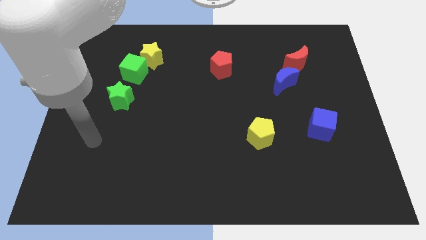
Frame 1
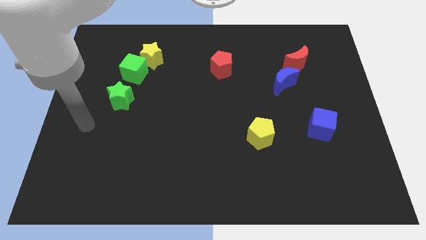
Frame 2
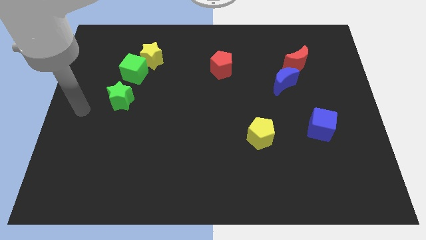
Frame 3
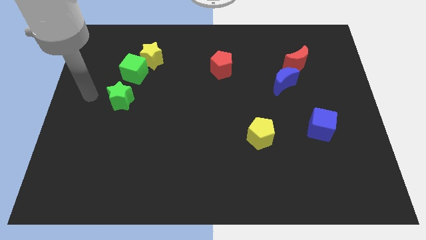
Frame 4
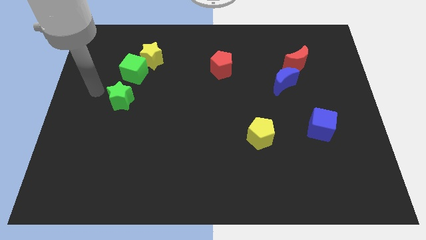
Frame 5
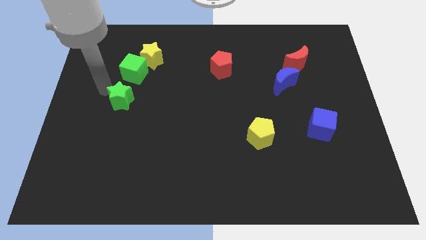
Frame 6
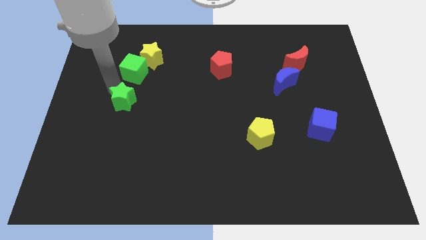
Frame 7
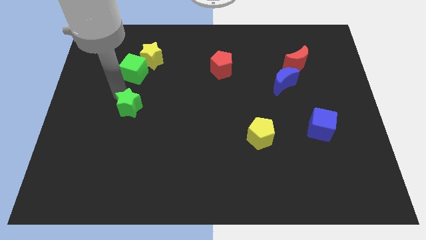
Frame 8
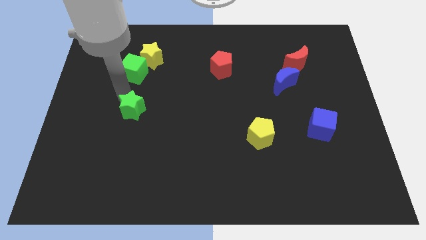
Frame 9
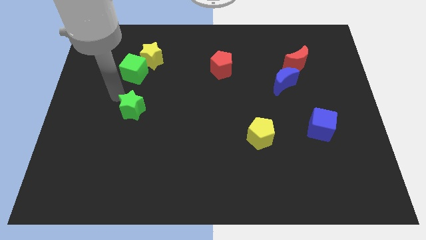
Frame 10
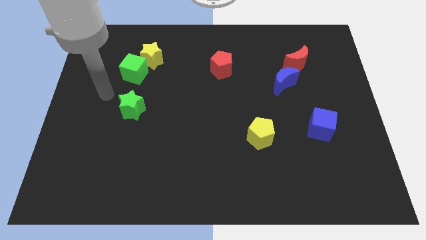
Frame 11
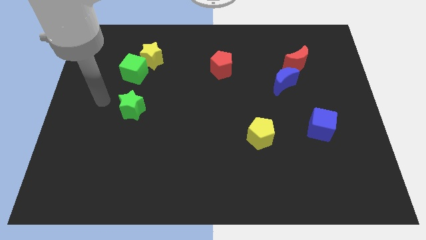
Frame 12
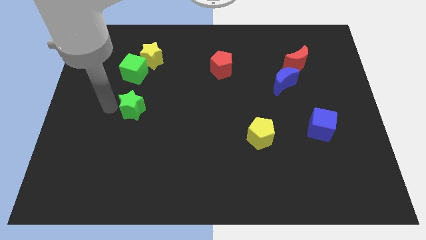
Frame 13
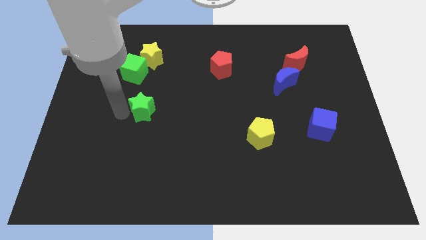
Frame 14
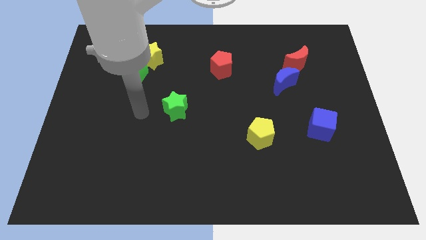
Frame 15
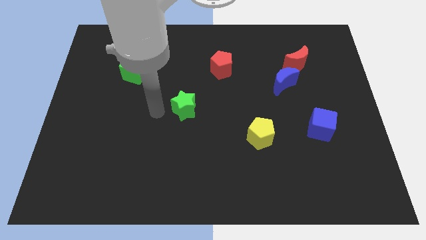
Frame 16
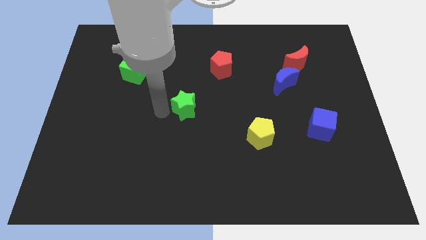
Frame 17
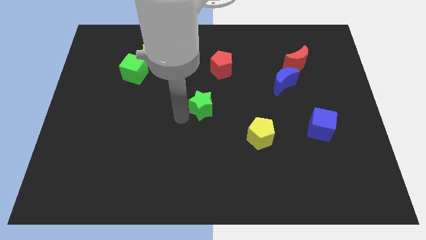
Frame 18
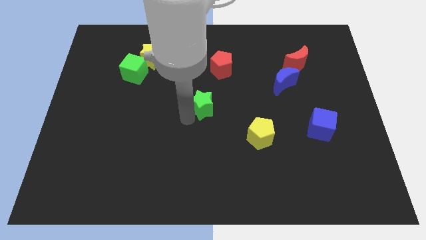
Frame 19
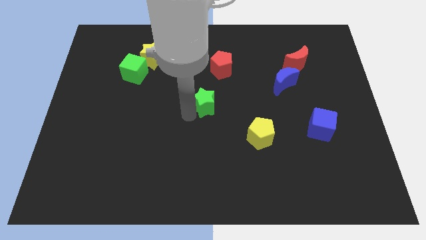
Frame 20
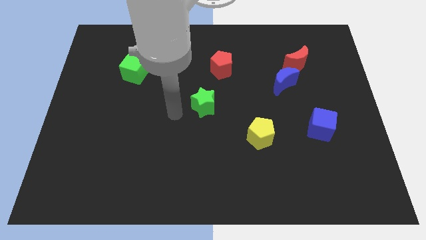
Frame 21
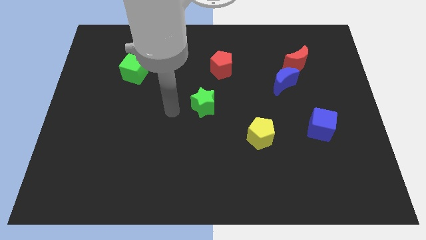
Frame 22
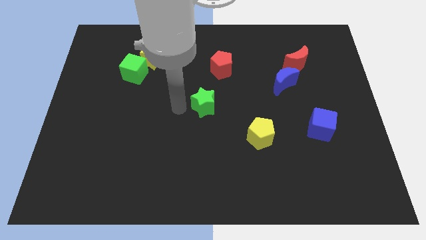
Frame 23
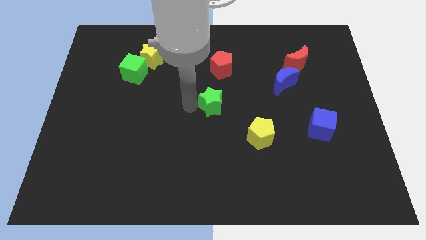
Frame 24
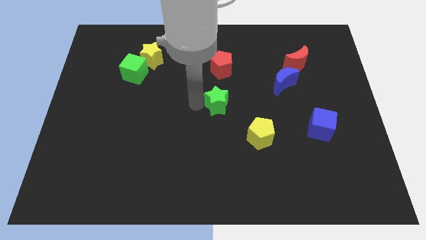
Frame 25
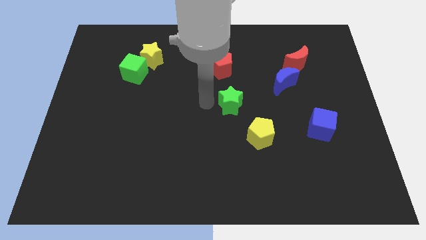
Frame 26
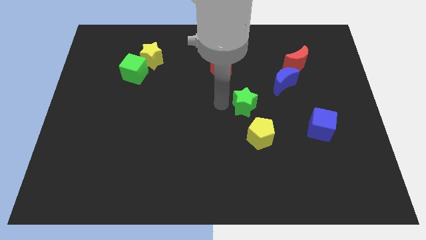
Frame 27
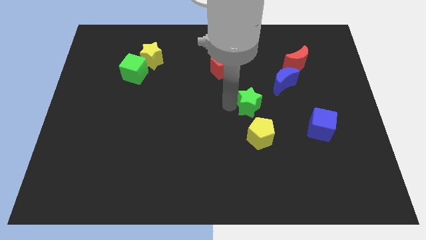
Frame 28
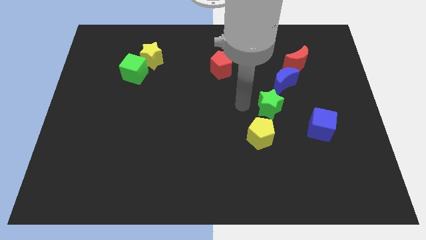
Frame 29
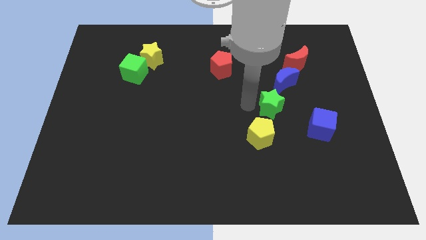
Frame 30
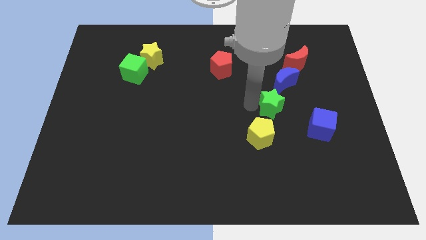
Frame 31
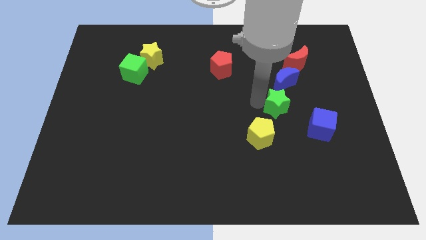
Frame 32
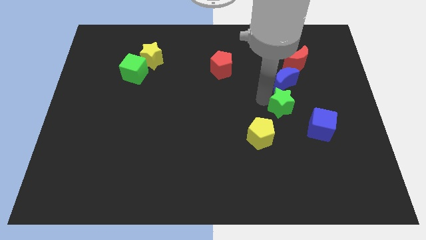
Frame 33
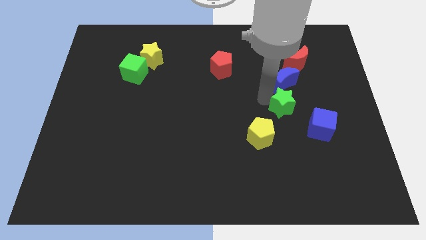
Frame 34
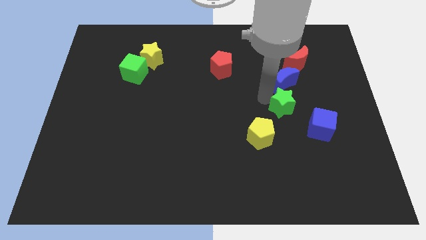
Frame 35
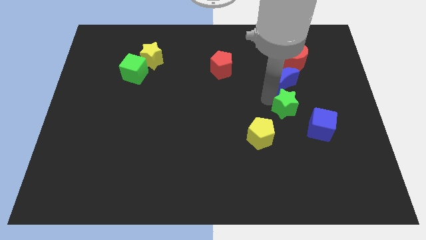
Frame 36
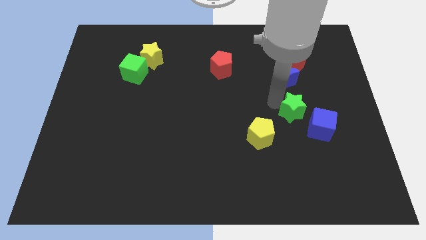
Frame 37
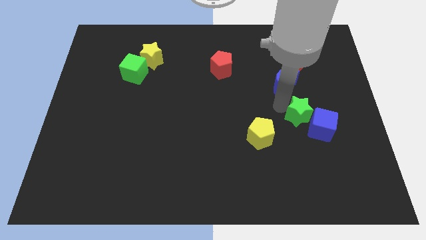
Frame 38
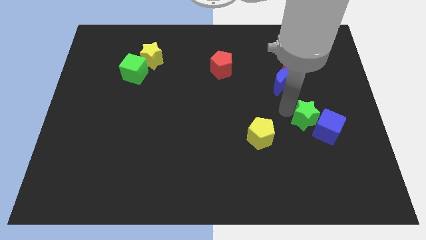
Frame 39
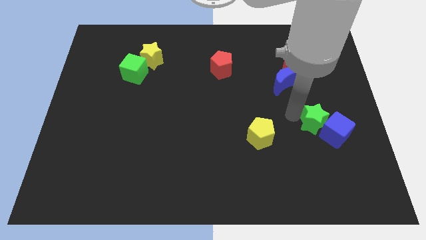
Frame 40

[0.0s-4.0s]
slide the green star towards the blue cube

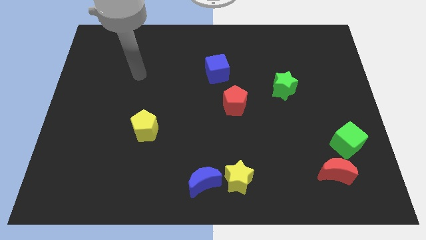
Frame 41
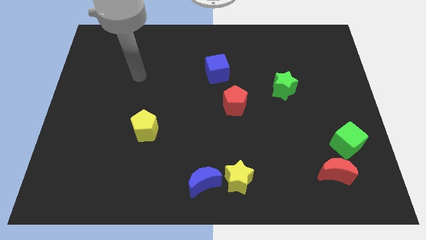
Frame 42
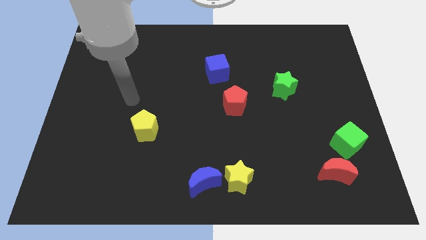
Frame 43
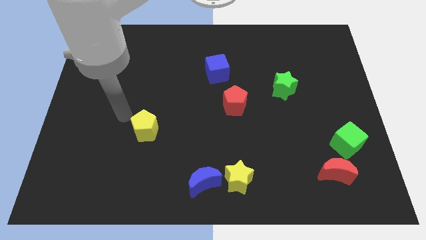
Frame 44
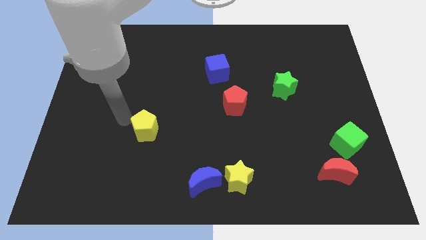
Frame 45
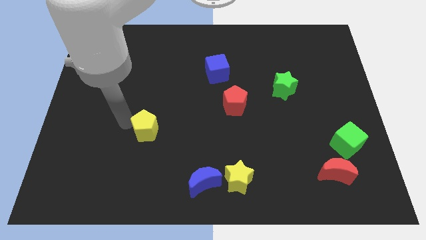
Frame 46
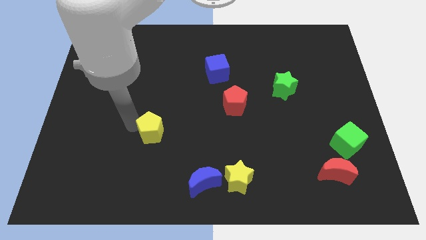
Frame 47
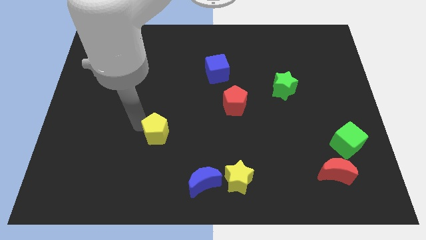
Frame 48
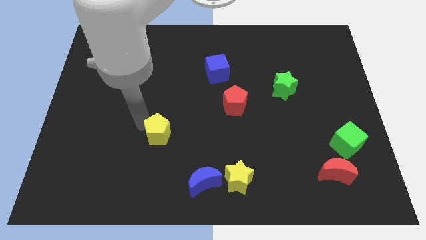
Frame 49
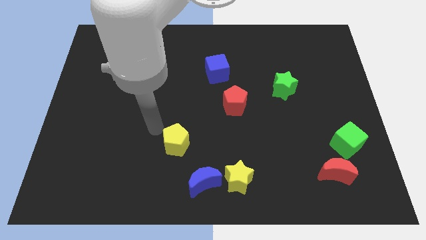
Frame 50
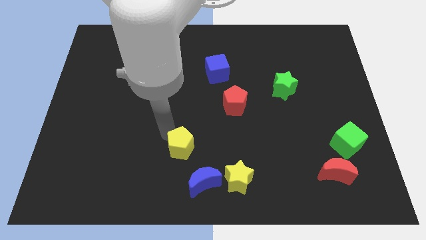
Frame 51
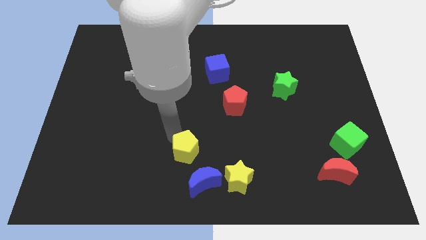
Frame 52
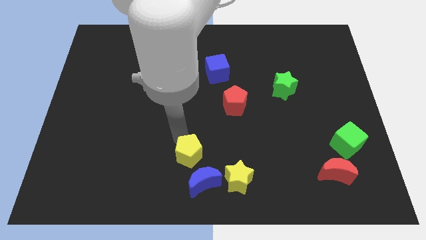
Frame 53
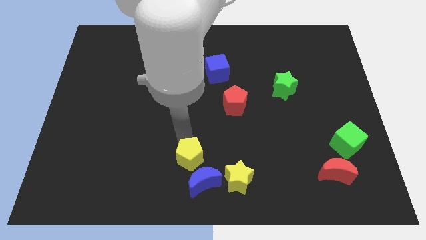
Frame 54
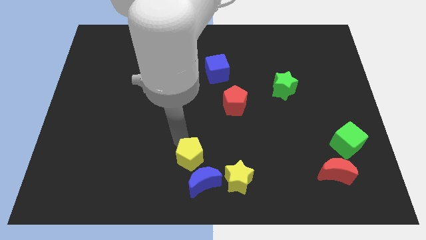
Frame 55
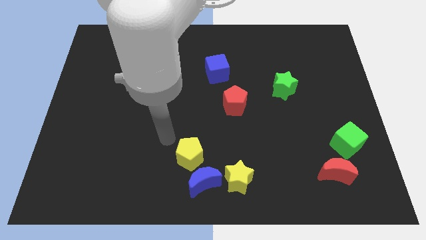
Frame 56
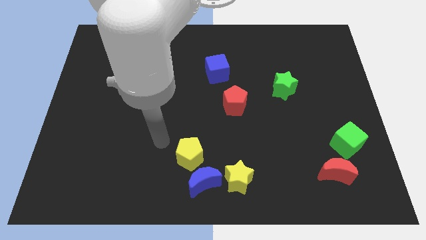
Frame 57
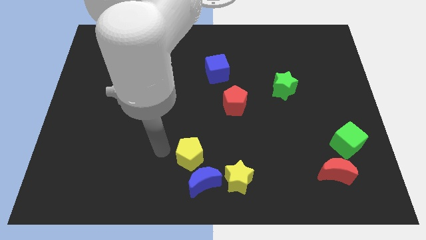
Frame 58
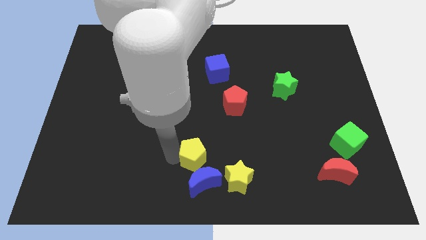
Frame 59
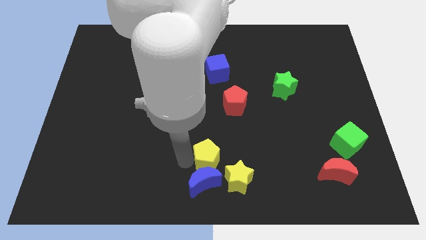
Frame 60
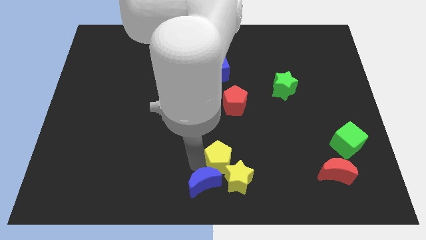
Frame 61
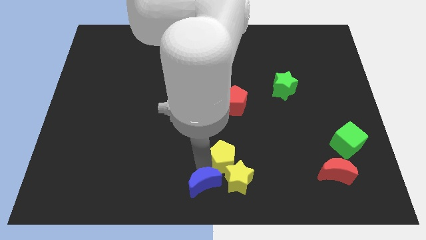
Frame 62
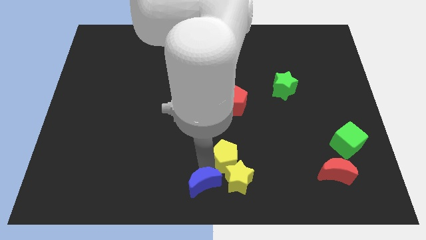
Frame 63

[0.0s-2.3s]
push the yellow pentagon towards the yellow star

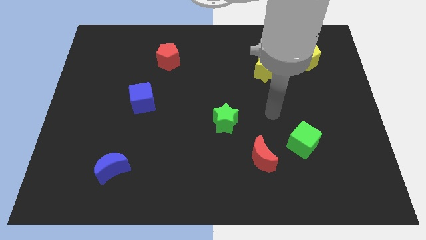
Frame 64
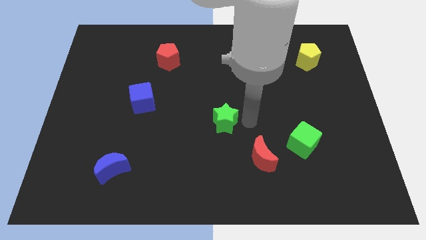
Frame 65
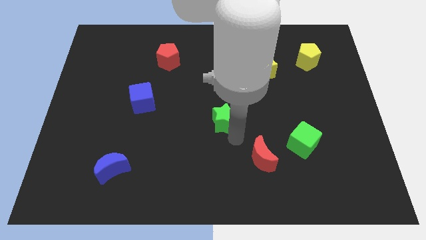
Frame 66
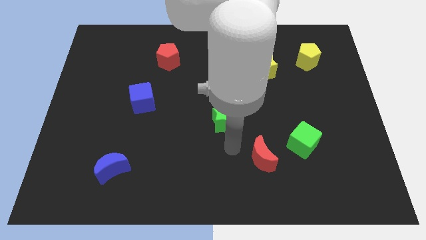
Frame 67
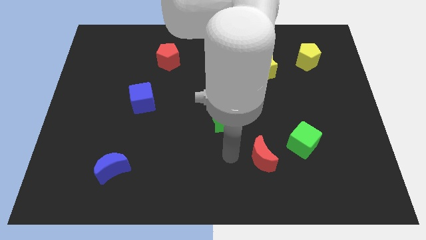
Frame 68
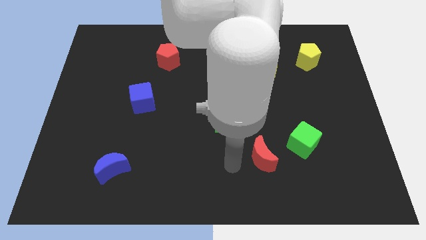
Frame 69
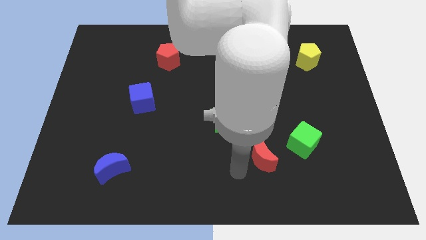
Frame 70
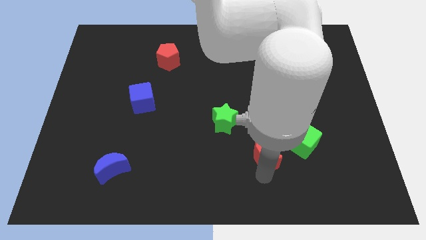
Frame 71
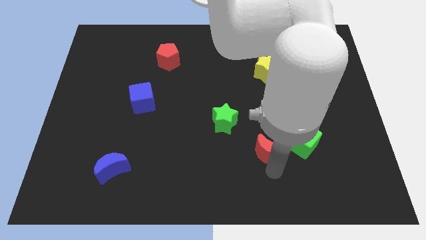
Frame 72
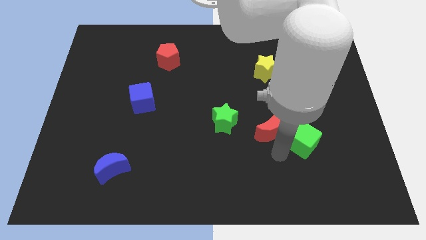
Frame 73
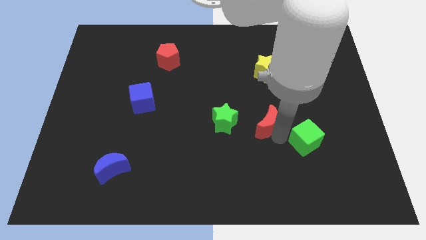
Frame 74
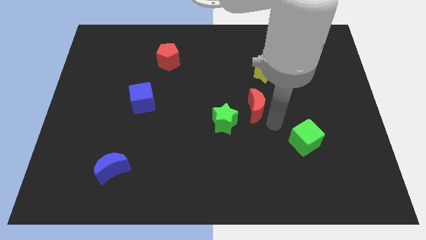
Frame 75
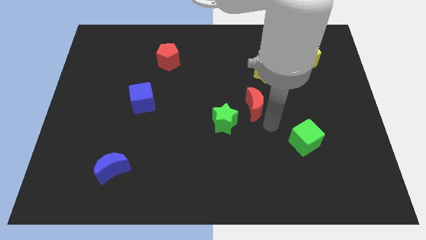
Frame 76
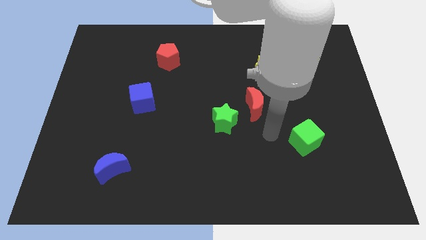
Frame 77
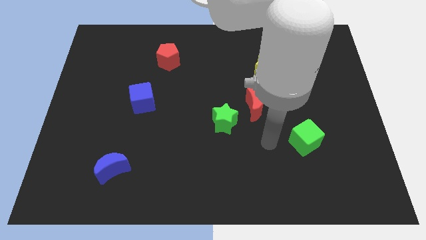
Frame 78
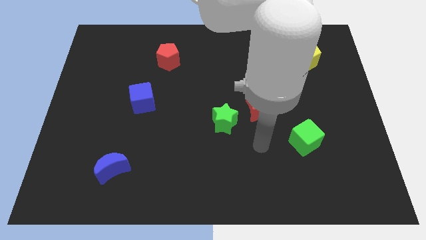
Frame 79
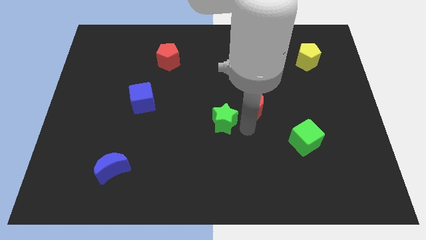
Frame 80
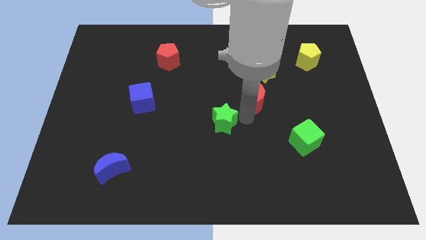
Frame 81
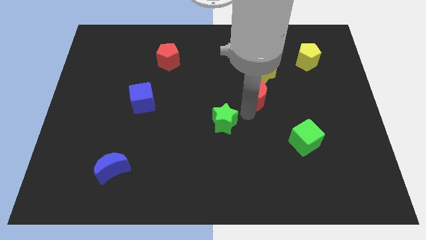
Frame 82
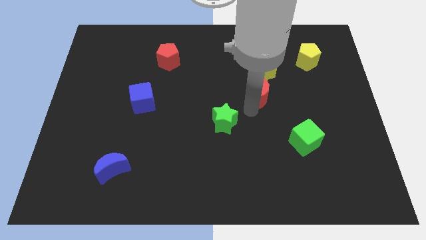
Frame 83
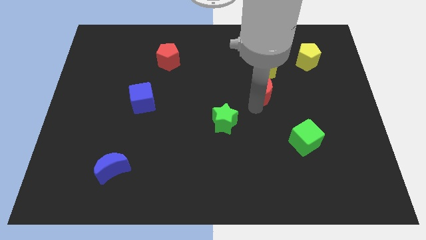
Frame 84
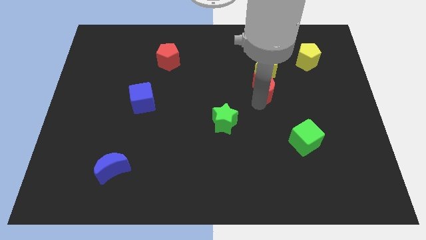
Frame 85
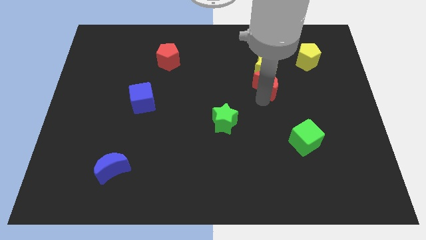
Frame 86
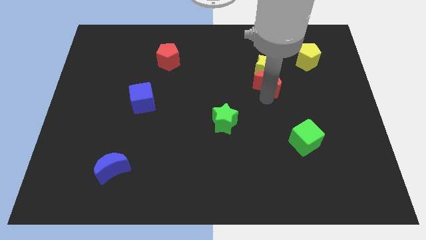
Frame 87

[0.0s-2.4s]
move the red moon close to the yellow star

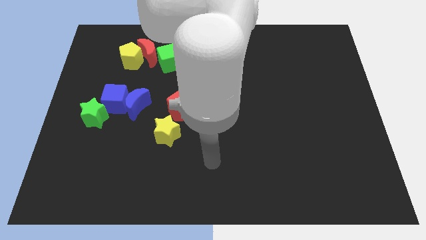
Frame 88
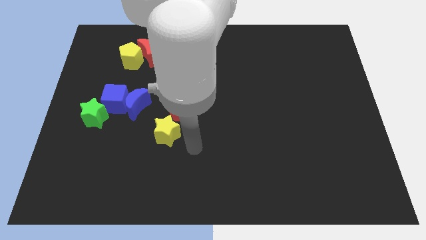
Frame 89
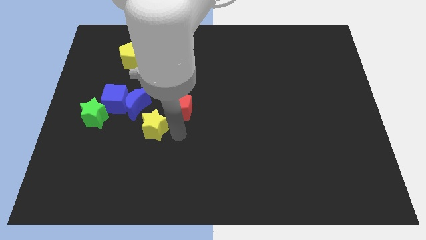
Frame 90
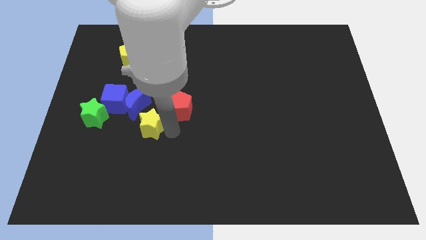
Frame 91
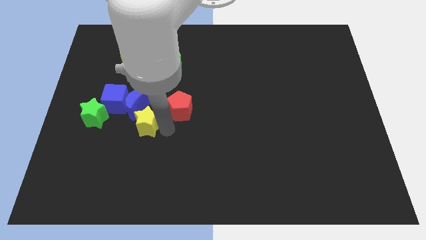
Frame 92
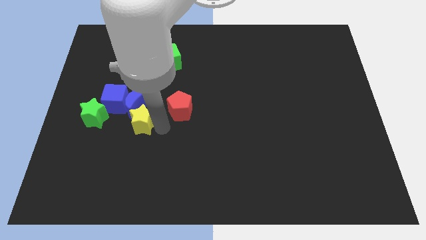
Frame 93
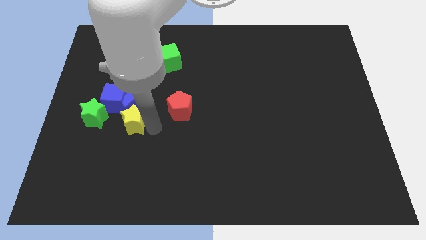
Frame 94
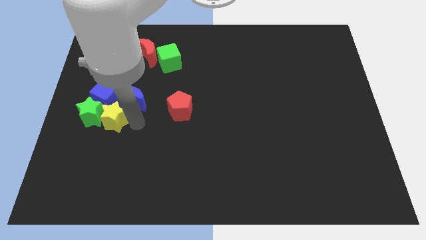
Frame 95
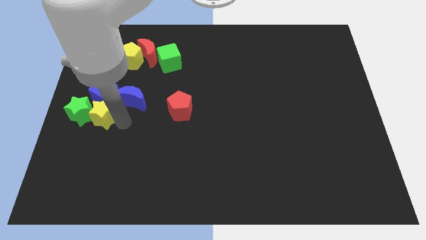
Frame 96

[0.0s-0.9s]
put the yellow star next to the green star
